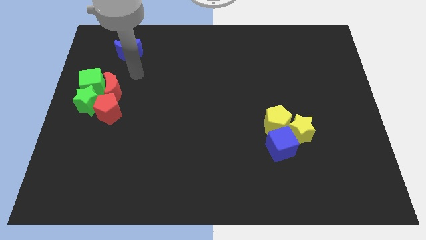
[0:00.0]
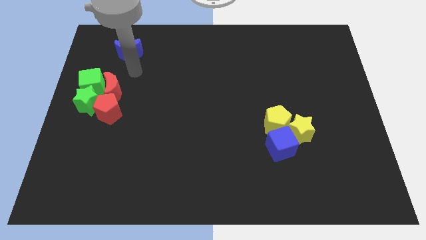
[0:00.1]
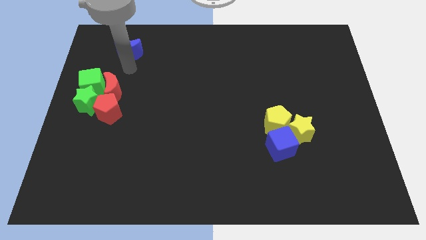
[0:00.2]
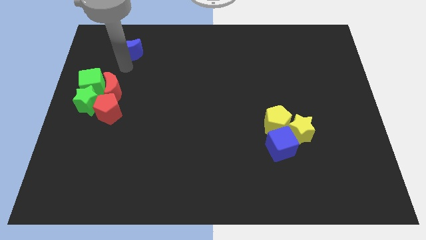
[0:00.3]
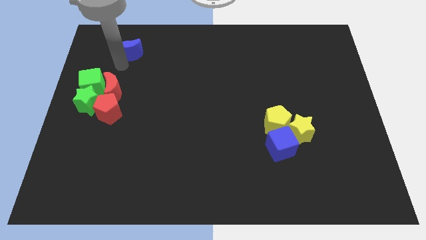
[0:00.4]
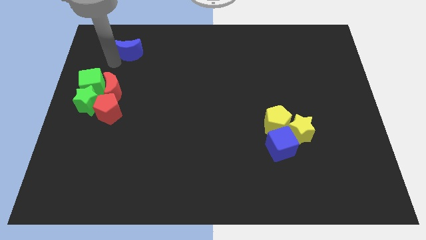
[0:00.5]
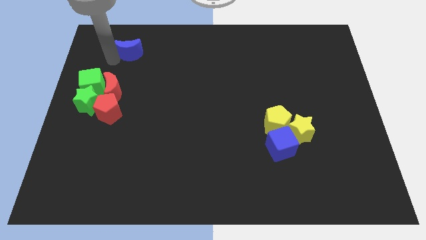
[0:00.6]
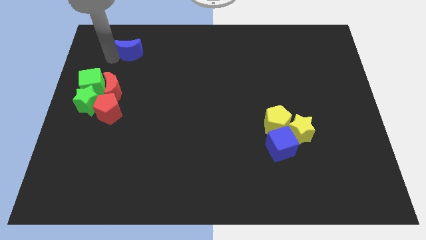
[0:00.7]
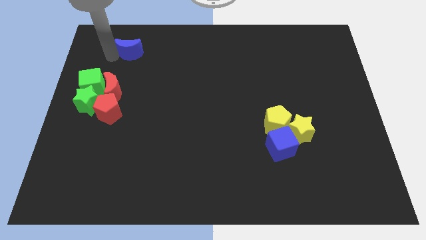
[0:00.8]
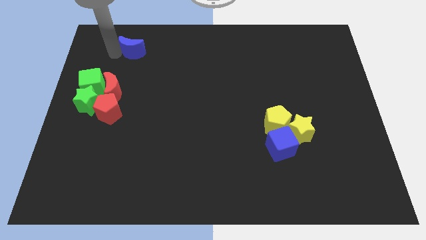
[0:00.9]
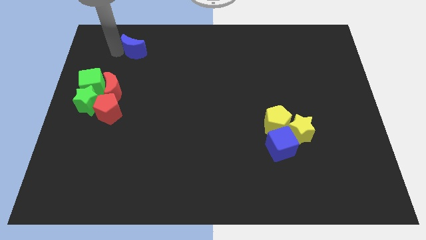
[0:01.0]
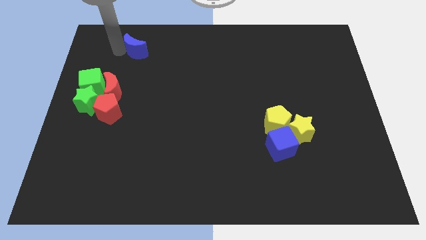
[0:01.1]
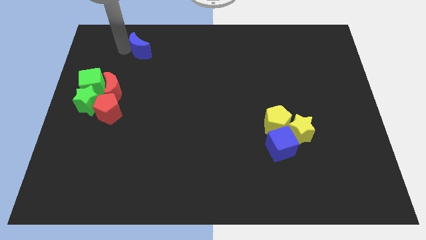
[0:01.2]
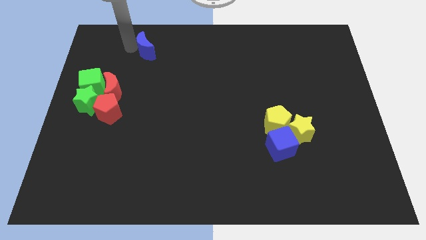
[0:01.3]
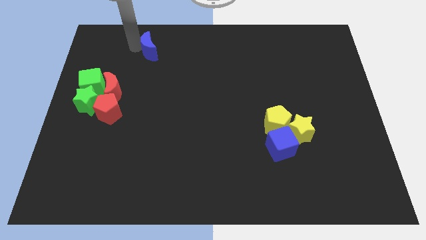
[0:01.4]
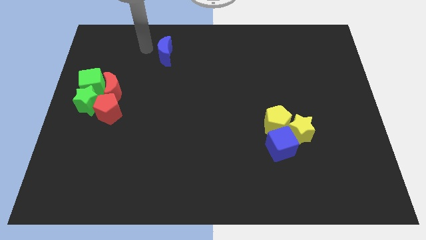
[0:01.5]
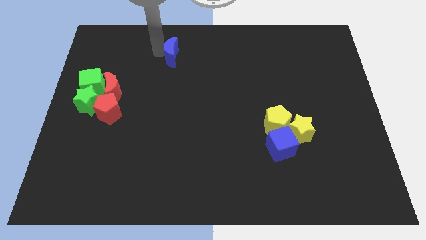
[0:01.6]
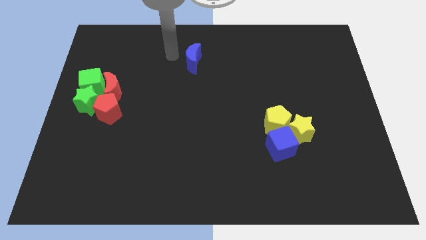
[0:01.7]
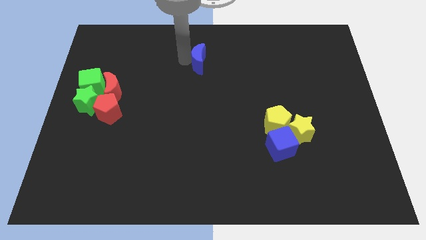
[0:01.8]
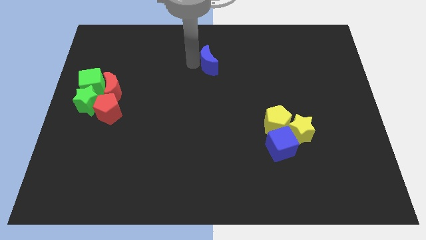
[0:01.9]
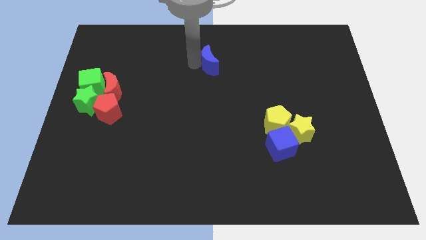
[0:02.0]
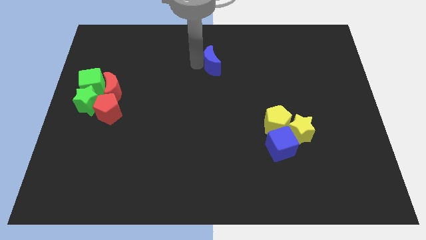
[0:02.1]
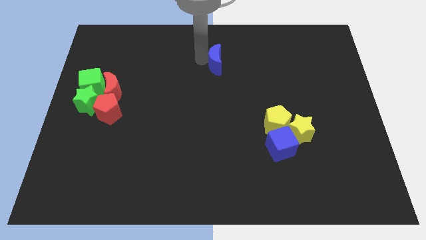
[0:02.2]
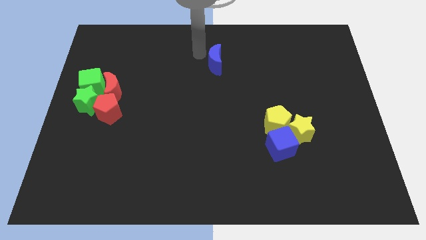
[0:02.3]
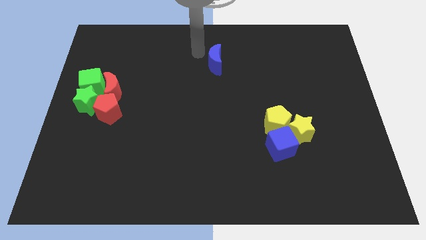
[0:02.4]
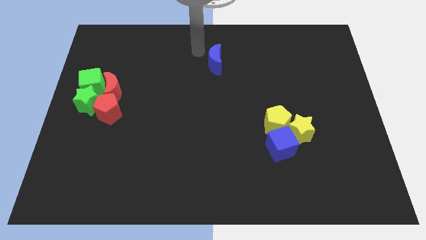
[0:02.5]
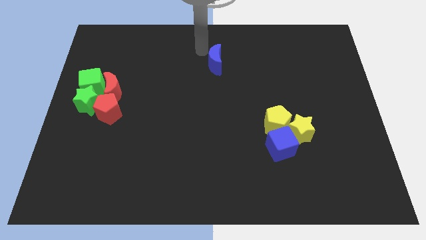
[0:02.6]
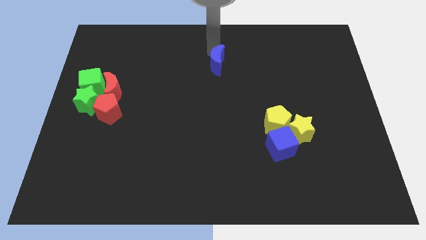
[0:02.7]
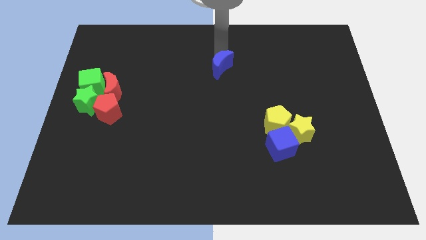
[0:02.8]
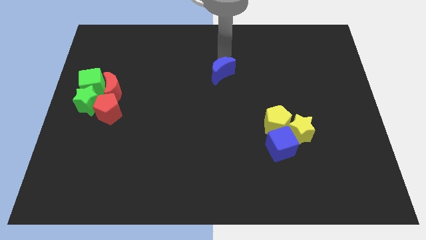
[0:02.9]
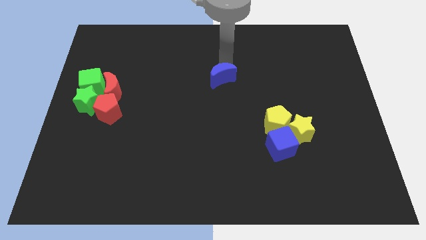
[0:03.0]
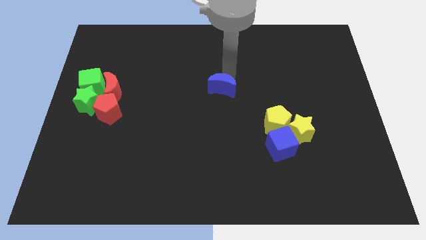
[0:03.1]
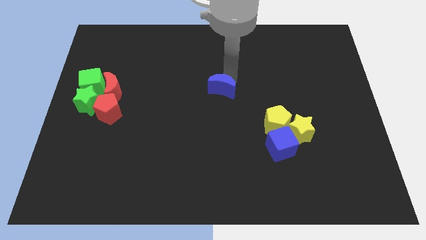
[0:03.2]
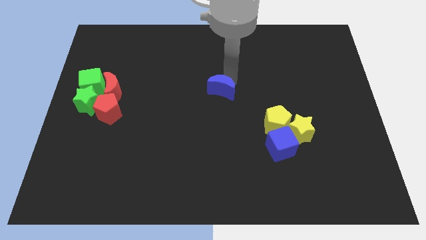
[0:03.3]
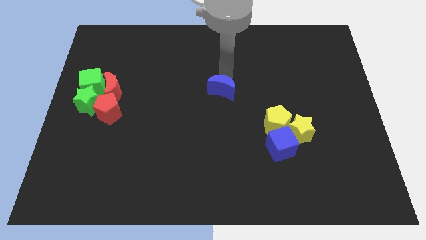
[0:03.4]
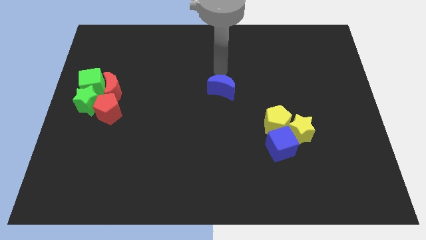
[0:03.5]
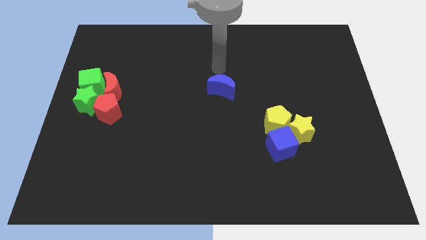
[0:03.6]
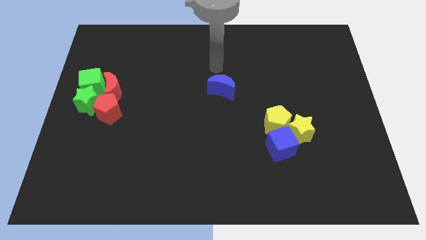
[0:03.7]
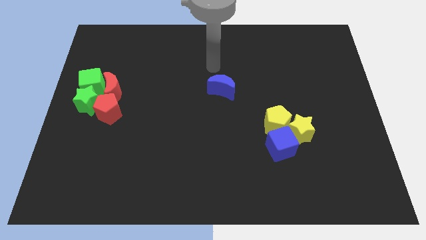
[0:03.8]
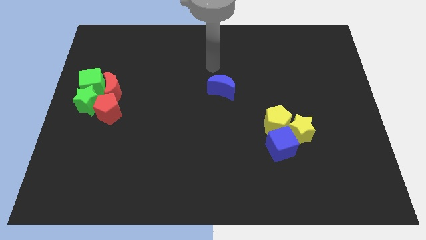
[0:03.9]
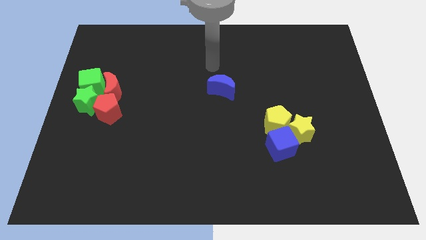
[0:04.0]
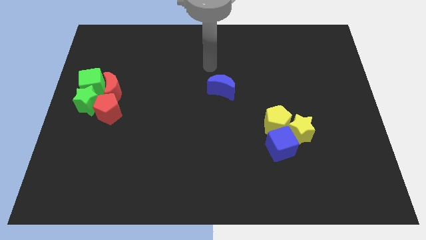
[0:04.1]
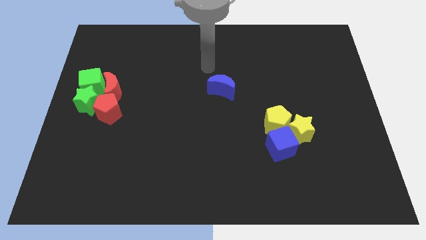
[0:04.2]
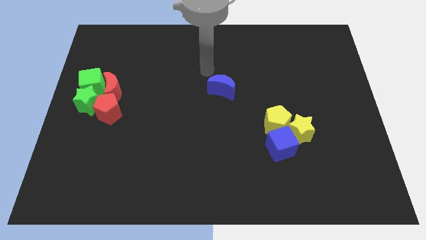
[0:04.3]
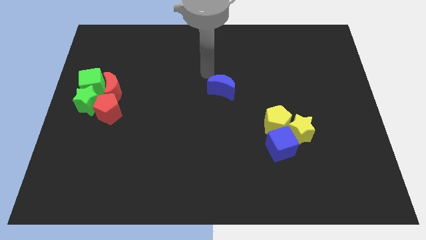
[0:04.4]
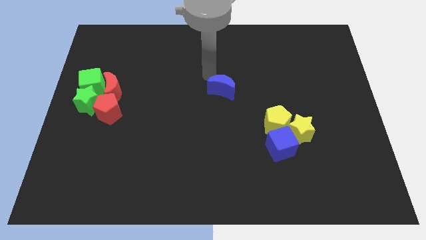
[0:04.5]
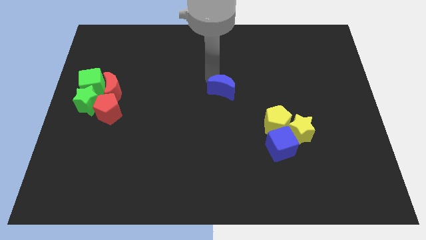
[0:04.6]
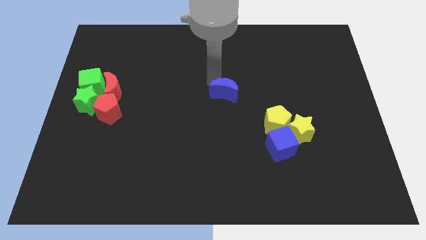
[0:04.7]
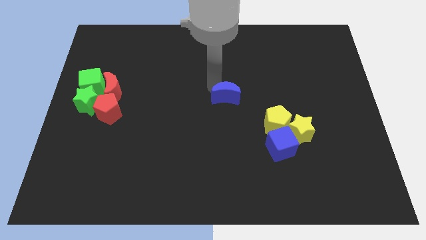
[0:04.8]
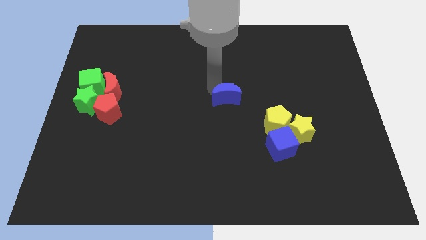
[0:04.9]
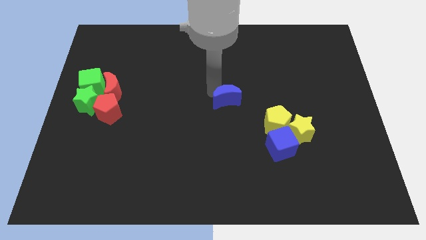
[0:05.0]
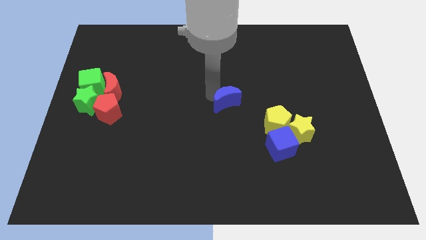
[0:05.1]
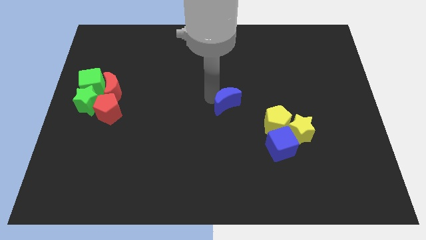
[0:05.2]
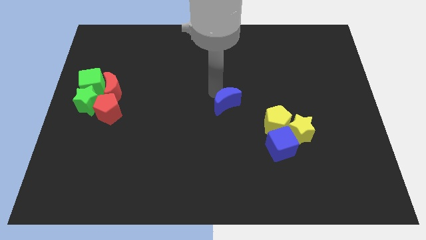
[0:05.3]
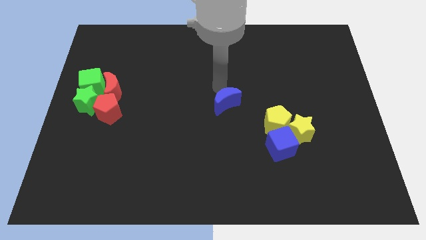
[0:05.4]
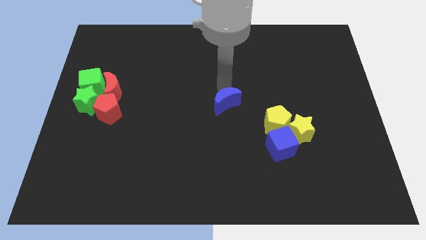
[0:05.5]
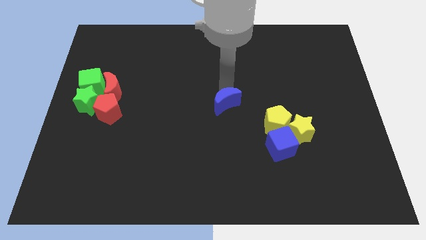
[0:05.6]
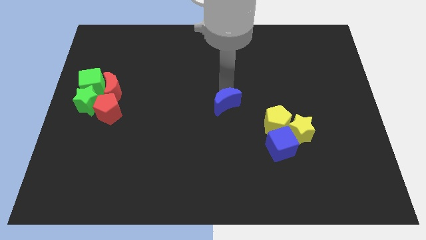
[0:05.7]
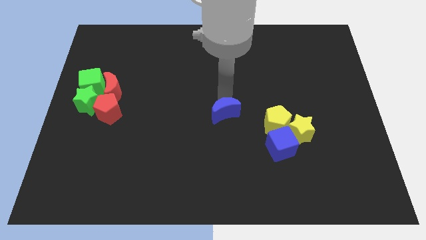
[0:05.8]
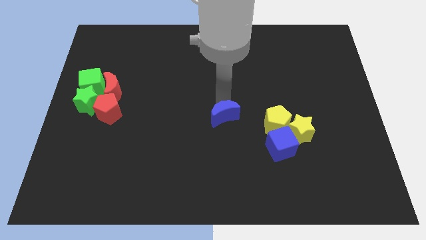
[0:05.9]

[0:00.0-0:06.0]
place the blue crescent to the red pentagon

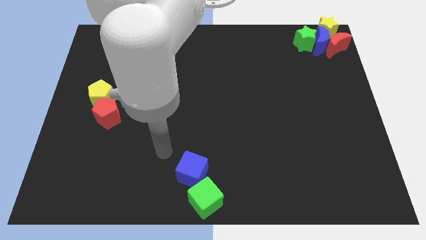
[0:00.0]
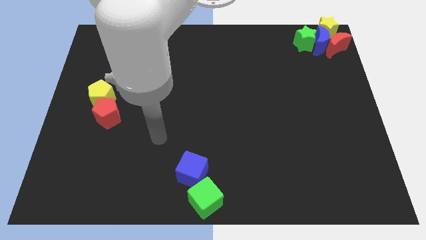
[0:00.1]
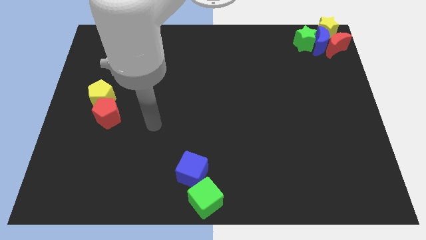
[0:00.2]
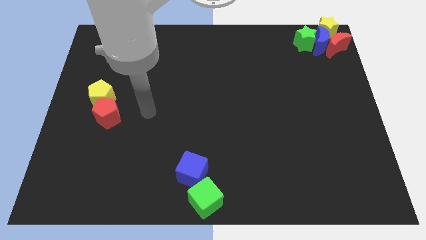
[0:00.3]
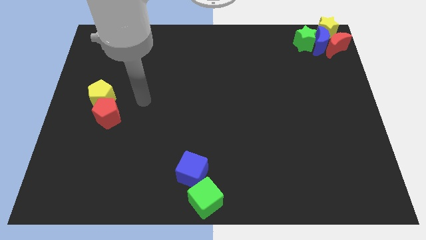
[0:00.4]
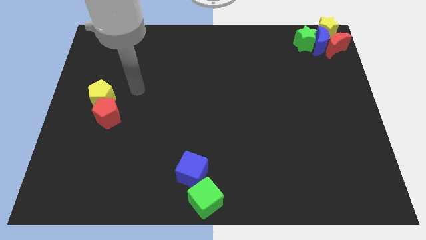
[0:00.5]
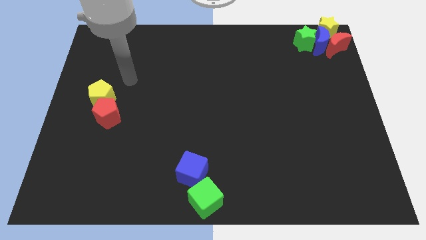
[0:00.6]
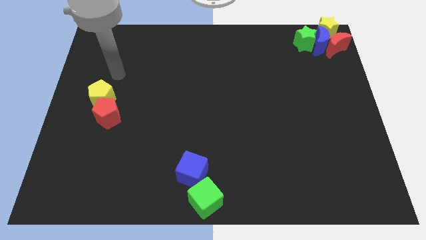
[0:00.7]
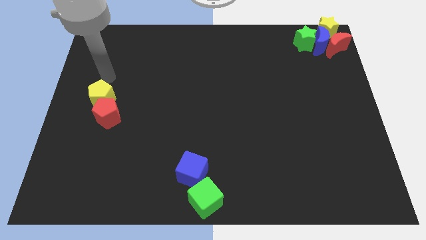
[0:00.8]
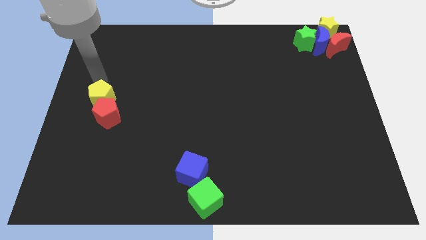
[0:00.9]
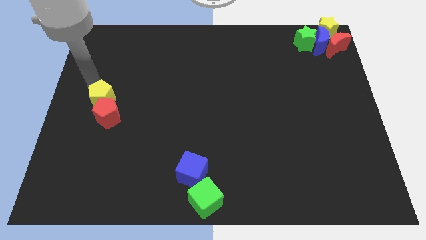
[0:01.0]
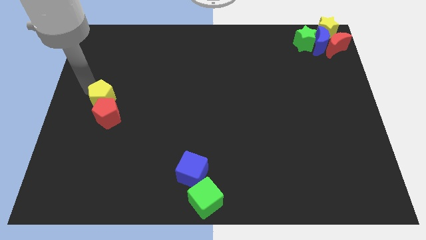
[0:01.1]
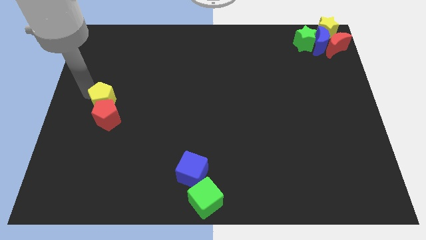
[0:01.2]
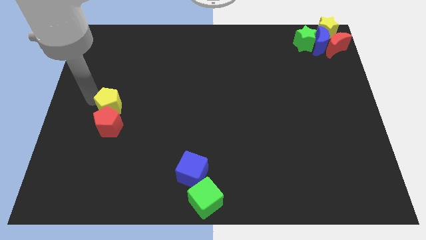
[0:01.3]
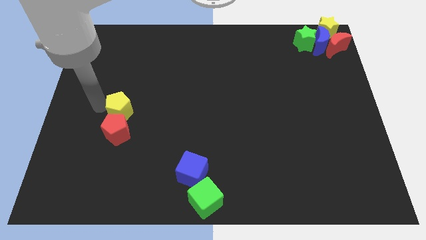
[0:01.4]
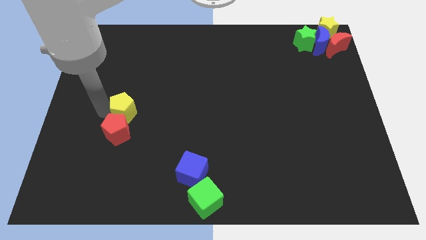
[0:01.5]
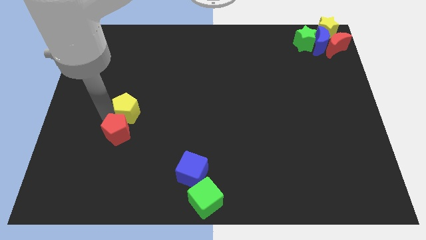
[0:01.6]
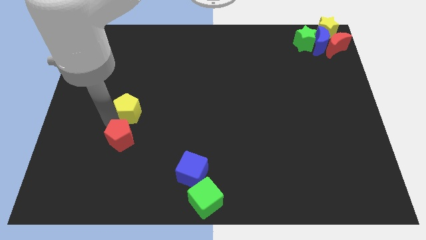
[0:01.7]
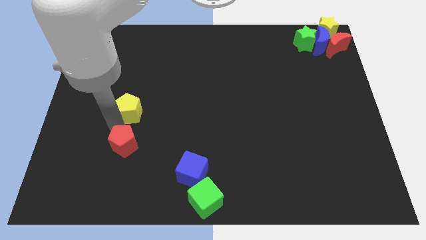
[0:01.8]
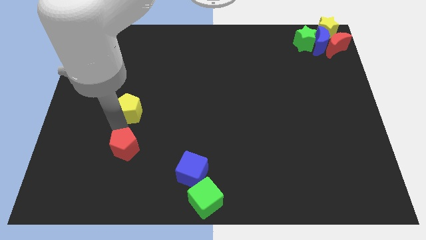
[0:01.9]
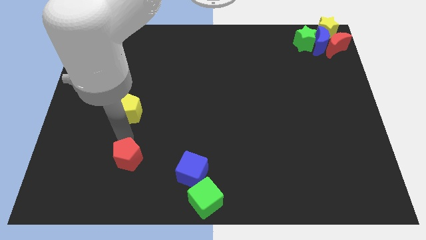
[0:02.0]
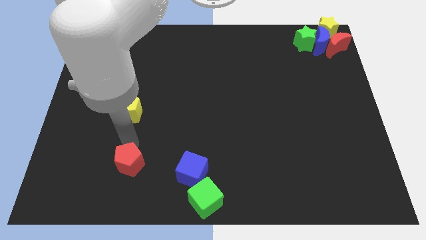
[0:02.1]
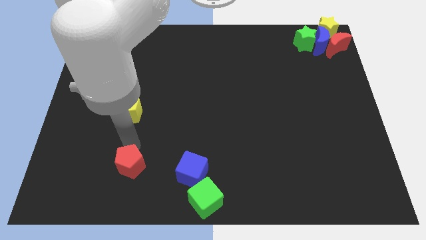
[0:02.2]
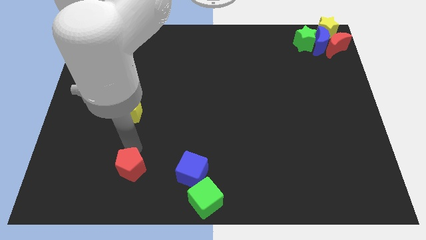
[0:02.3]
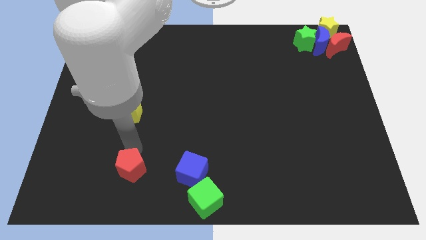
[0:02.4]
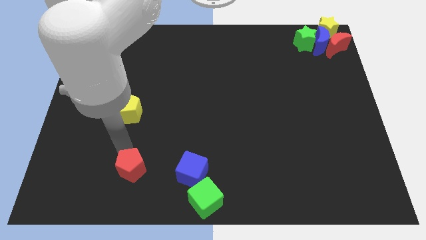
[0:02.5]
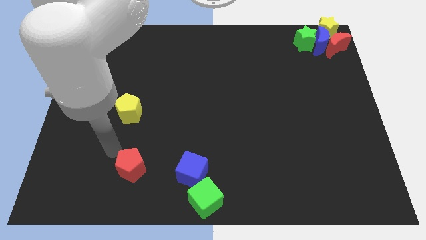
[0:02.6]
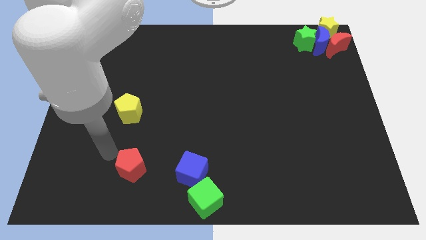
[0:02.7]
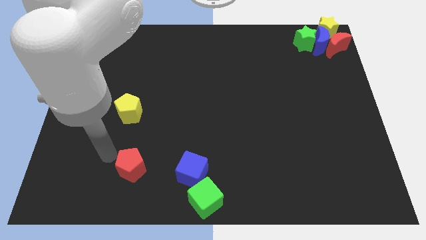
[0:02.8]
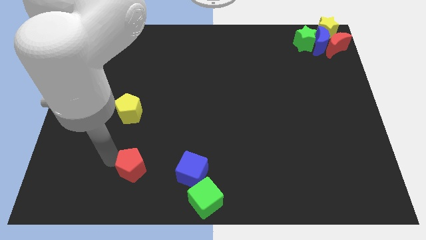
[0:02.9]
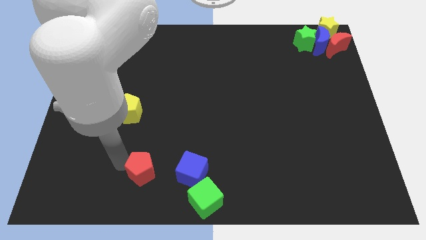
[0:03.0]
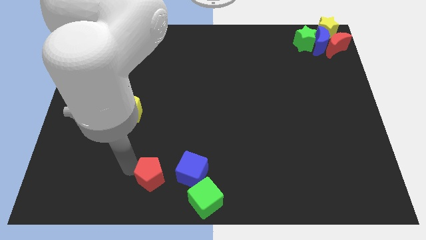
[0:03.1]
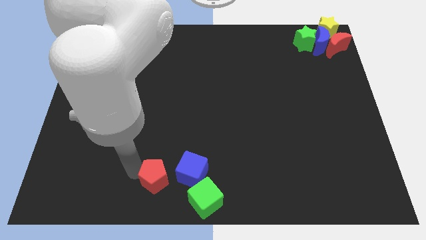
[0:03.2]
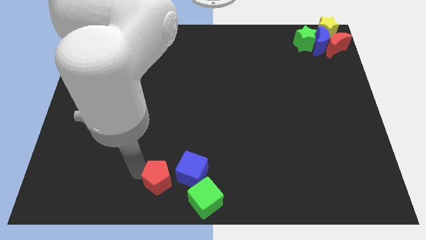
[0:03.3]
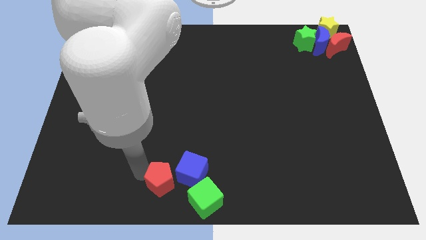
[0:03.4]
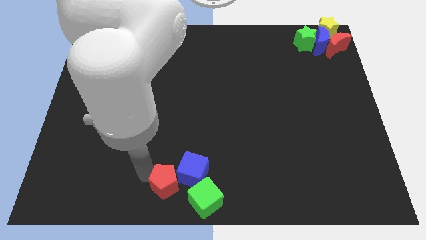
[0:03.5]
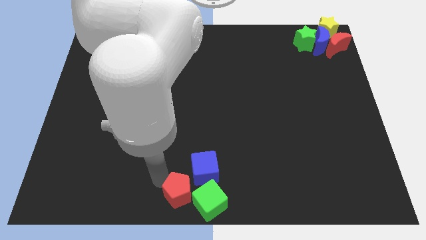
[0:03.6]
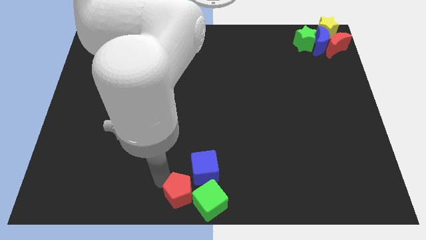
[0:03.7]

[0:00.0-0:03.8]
push the red pentagon into the group of blocks
